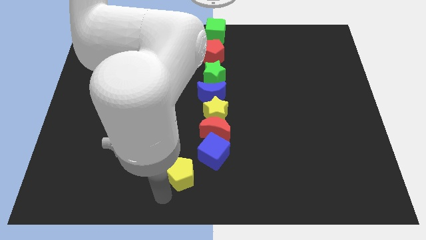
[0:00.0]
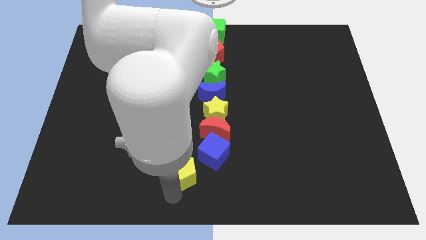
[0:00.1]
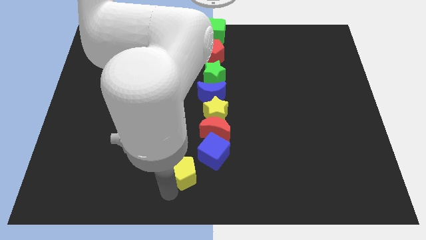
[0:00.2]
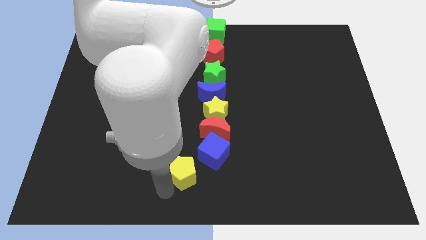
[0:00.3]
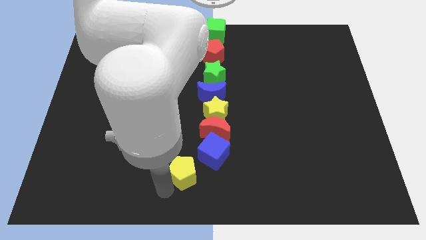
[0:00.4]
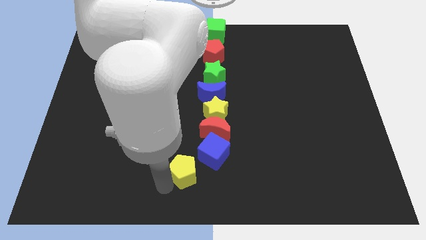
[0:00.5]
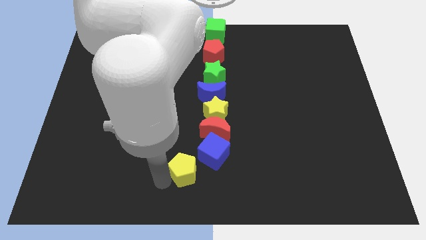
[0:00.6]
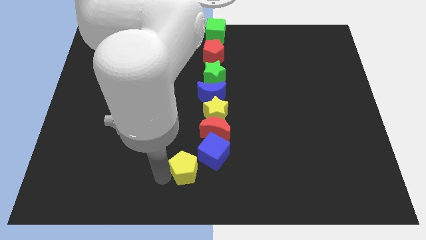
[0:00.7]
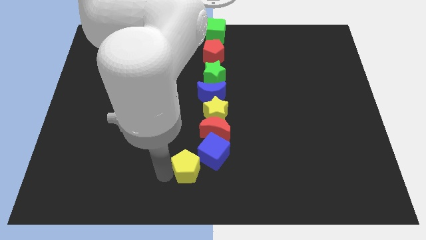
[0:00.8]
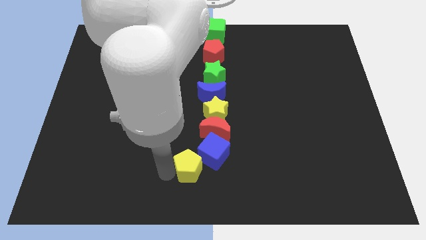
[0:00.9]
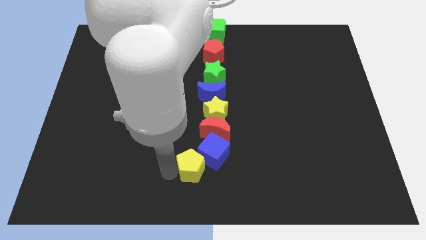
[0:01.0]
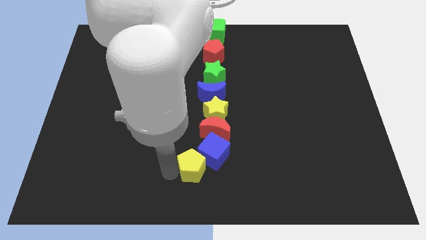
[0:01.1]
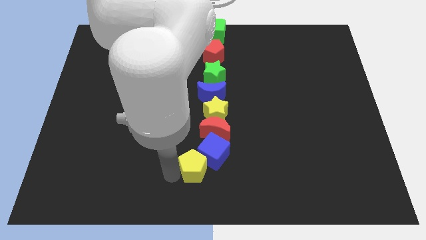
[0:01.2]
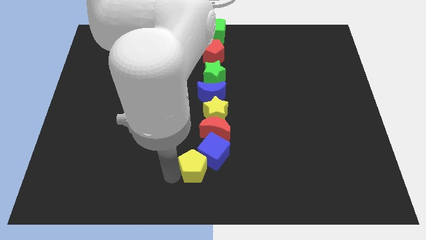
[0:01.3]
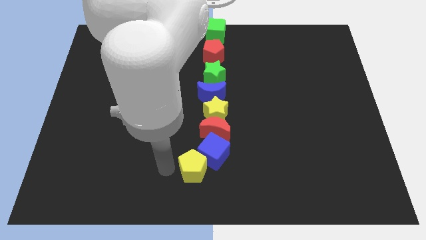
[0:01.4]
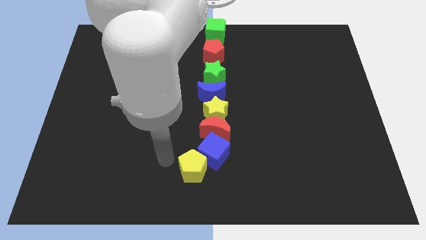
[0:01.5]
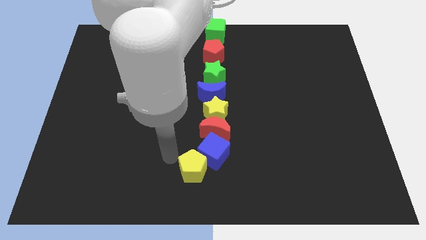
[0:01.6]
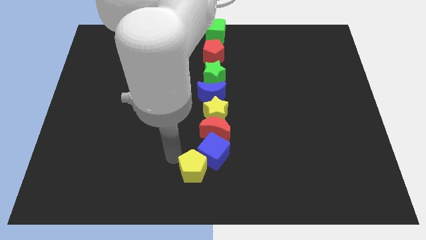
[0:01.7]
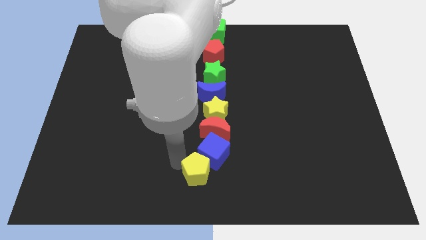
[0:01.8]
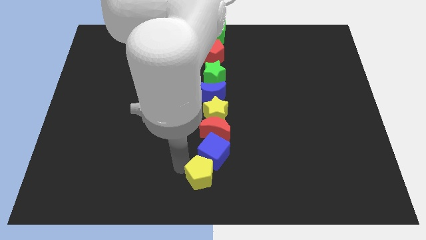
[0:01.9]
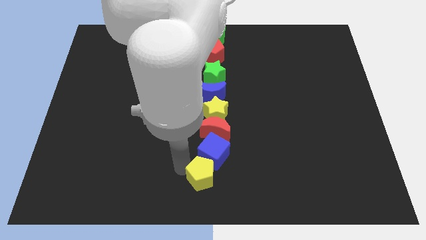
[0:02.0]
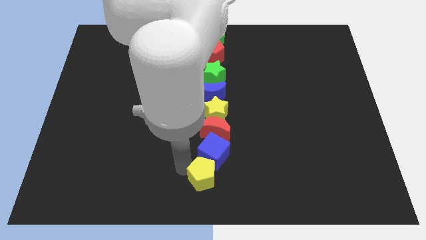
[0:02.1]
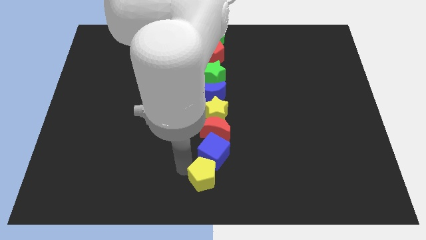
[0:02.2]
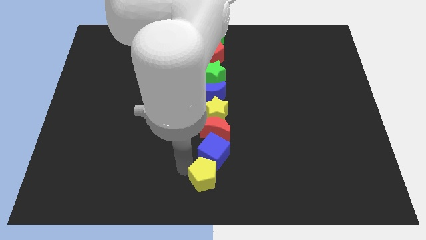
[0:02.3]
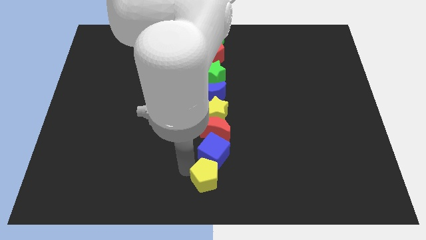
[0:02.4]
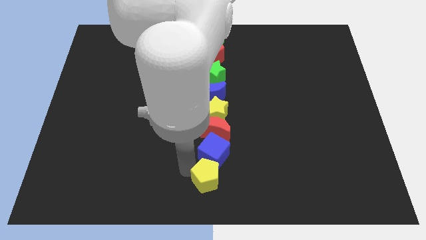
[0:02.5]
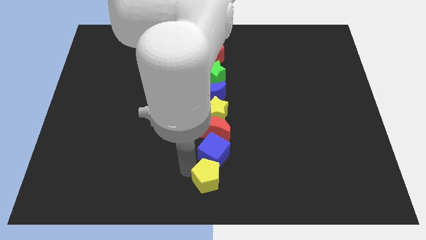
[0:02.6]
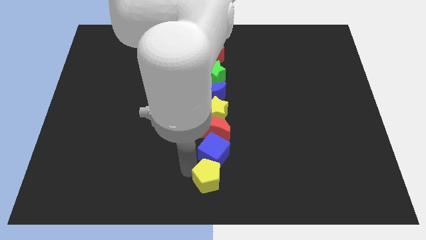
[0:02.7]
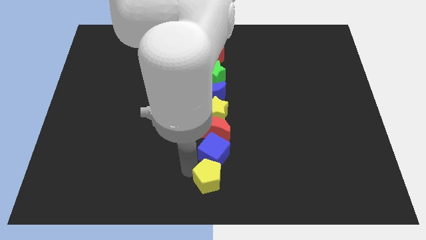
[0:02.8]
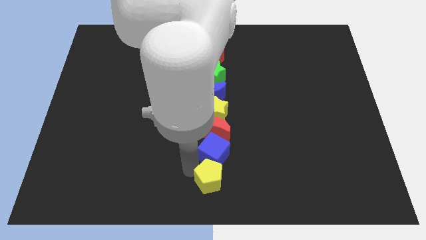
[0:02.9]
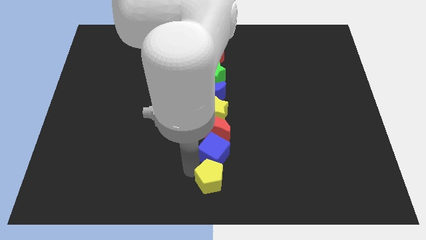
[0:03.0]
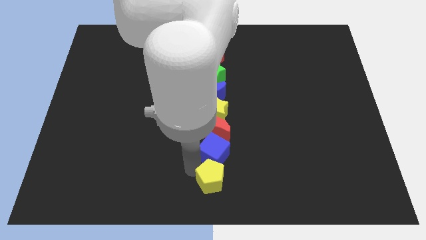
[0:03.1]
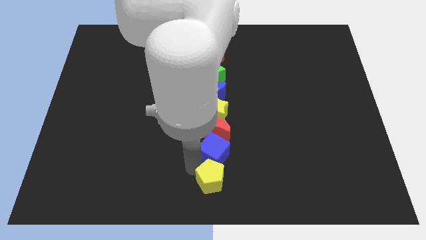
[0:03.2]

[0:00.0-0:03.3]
place the yellow pentagon below the blue cube in a vertical line of blocks

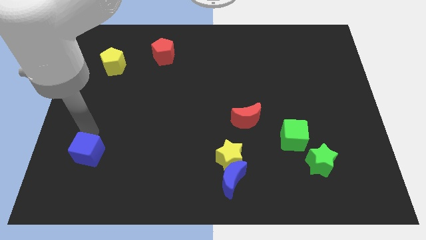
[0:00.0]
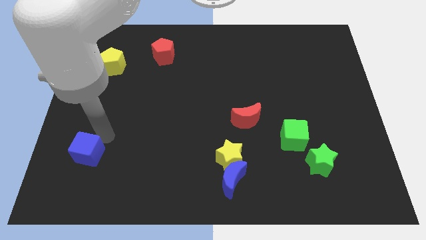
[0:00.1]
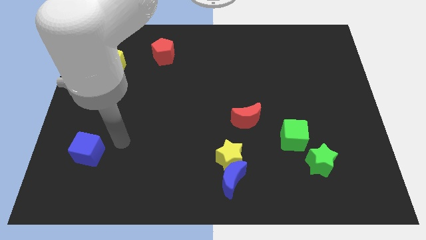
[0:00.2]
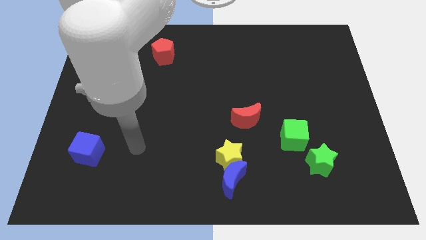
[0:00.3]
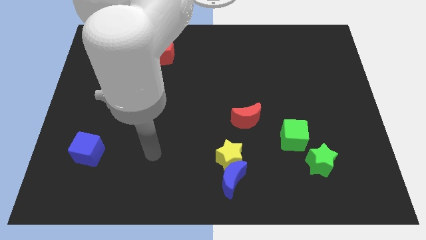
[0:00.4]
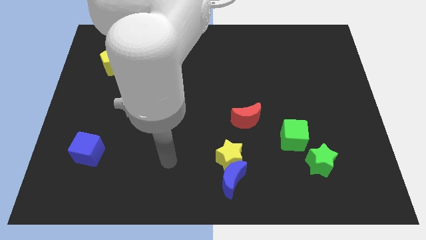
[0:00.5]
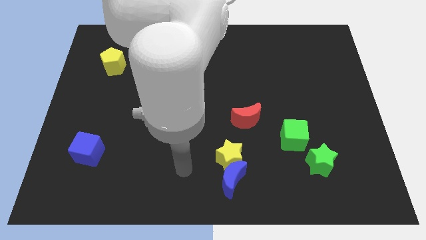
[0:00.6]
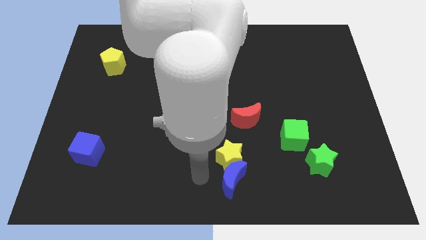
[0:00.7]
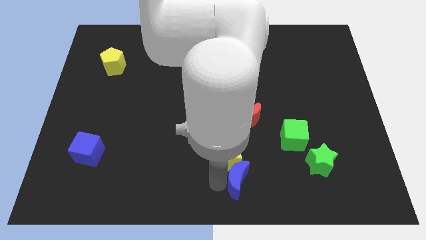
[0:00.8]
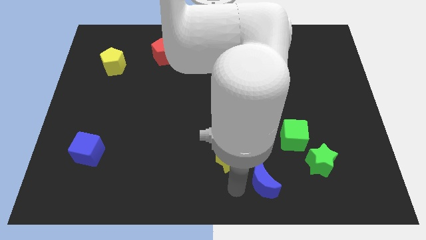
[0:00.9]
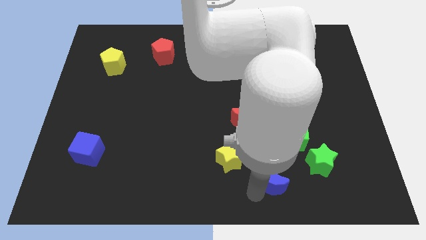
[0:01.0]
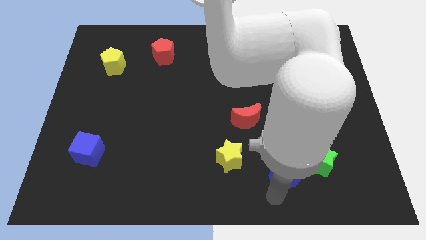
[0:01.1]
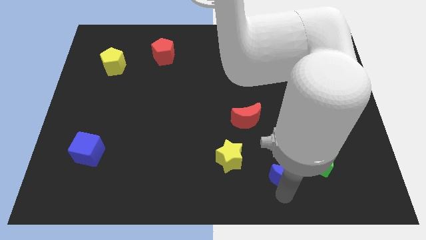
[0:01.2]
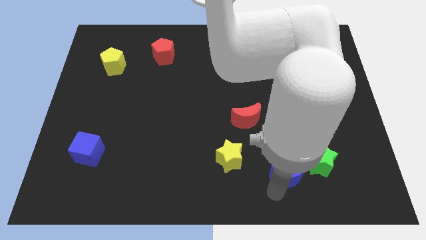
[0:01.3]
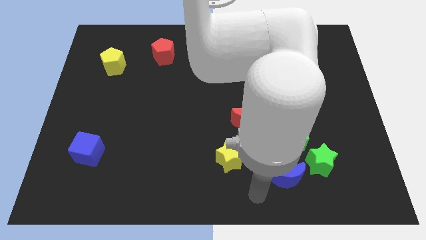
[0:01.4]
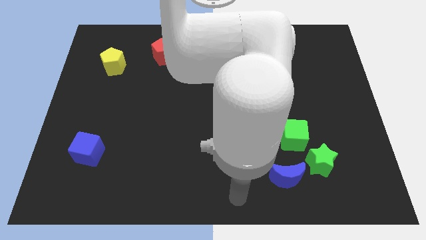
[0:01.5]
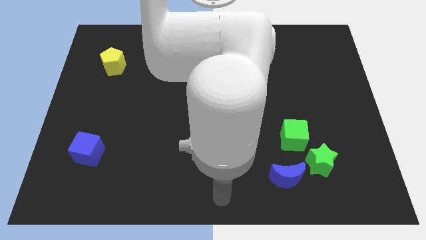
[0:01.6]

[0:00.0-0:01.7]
move the blue crescent to the bottom of the green cube

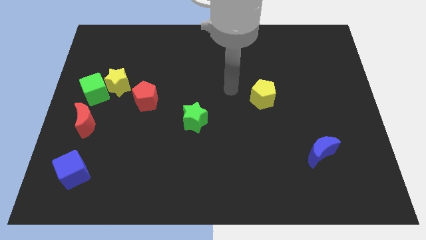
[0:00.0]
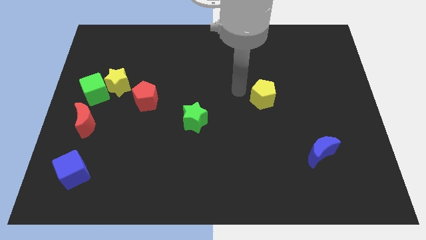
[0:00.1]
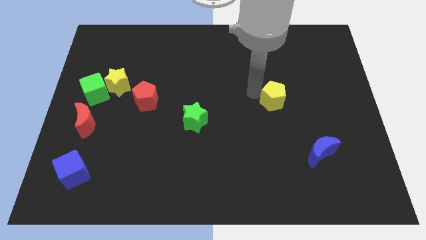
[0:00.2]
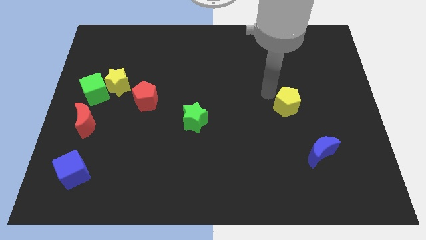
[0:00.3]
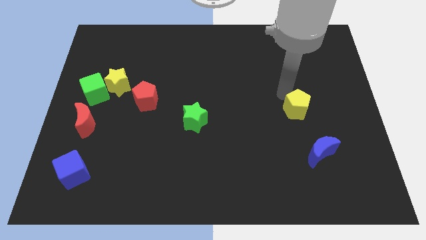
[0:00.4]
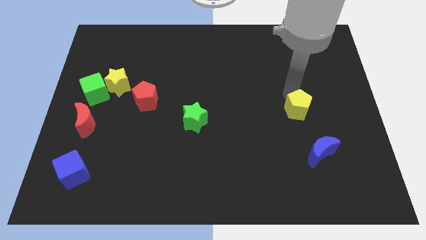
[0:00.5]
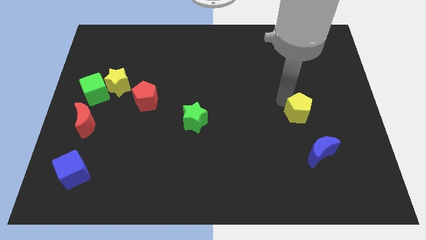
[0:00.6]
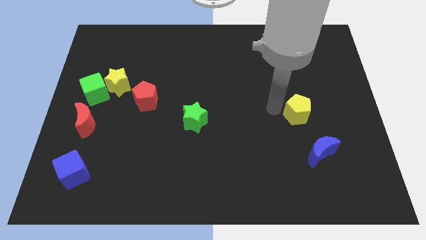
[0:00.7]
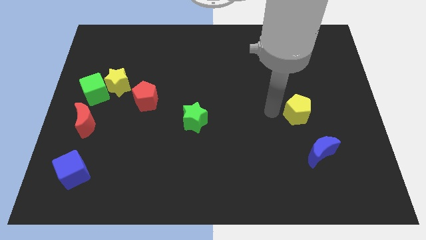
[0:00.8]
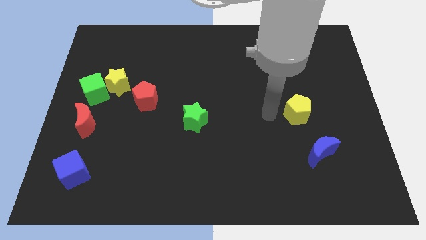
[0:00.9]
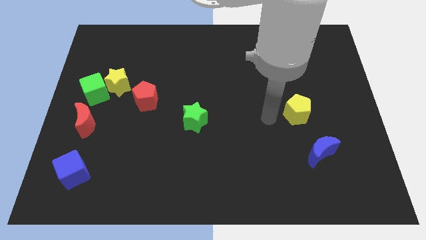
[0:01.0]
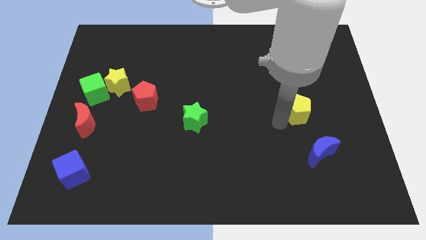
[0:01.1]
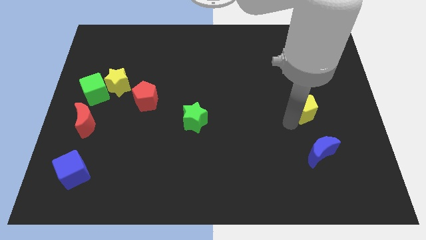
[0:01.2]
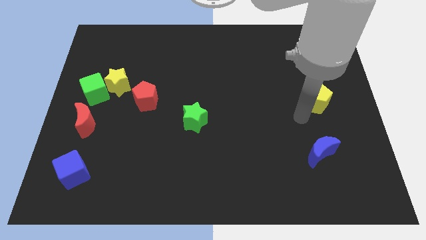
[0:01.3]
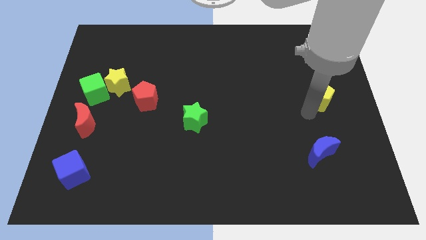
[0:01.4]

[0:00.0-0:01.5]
drag the yellow pentagon towards the center right

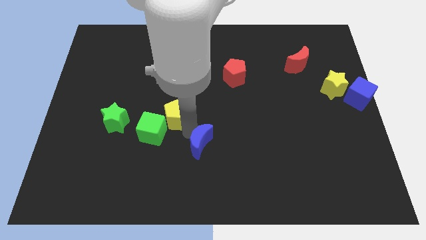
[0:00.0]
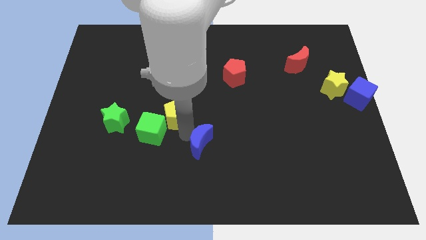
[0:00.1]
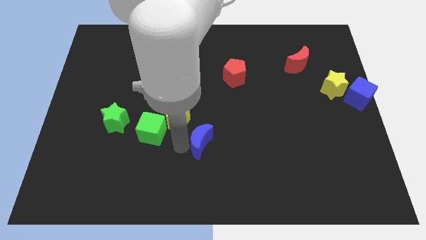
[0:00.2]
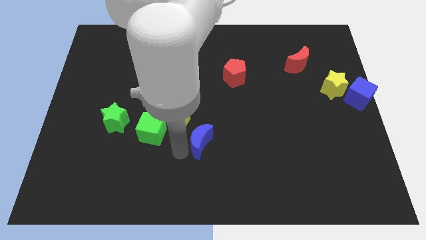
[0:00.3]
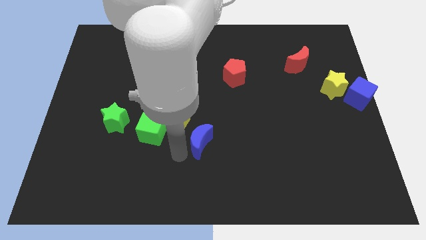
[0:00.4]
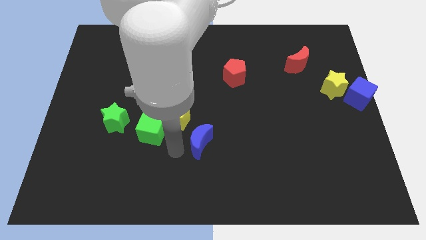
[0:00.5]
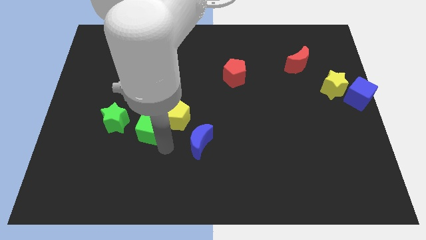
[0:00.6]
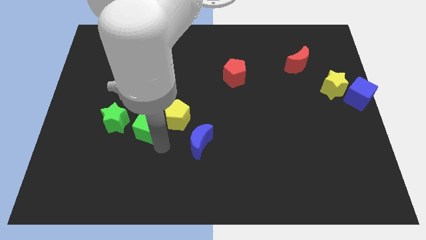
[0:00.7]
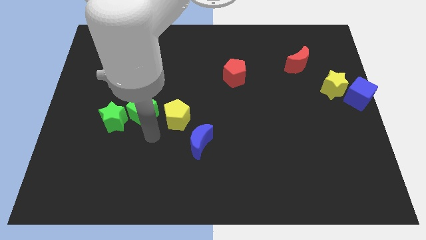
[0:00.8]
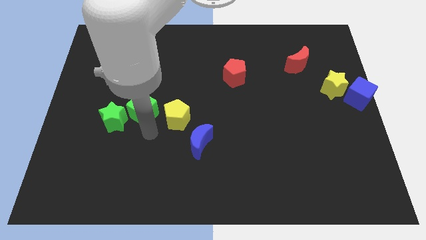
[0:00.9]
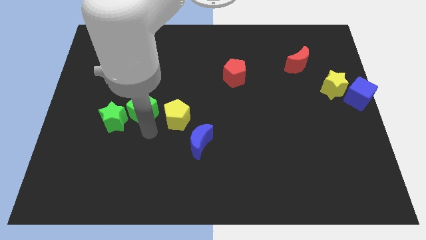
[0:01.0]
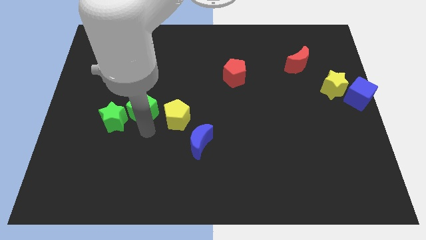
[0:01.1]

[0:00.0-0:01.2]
move green cube into the green star

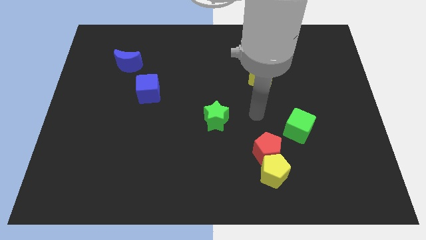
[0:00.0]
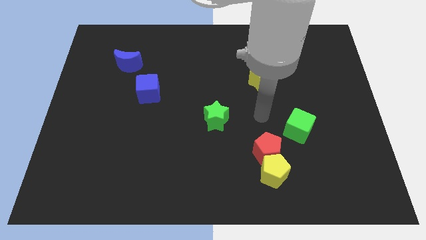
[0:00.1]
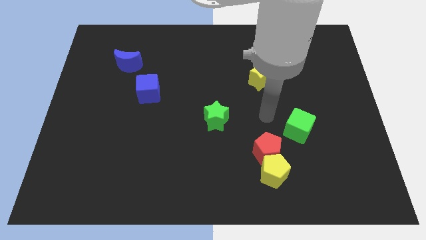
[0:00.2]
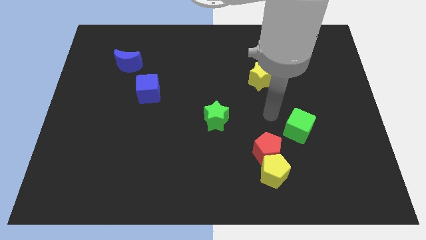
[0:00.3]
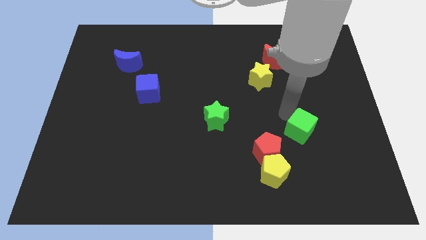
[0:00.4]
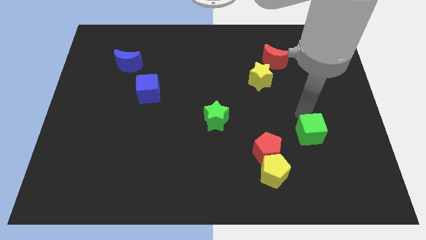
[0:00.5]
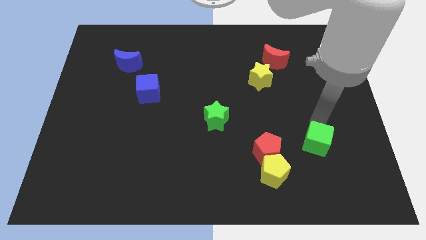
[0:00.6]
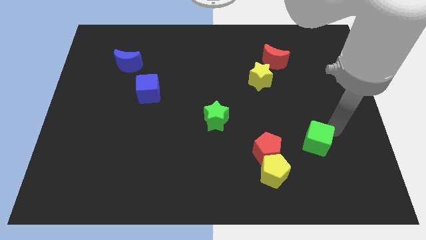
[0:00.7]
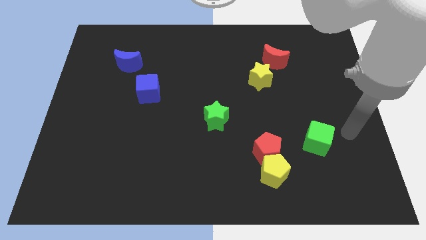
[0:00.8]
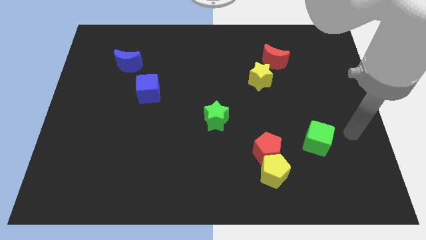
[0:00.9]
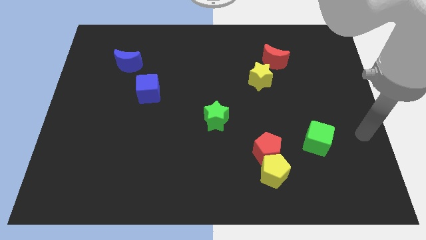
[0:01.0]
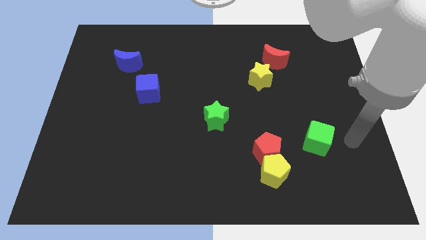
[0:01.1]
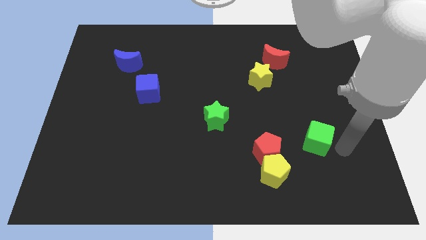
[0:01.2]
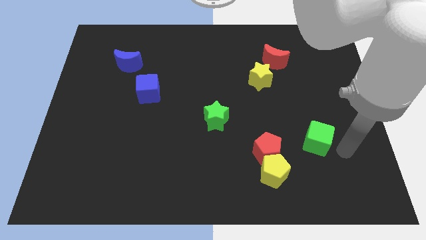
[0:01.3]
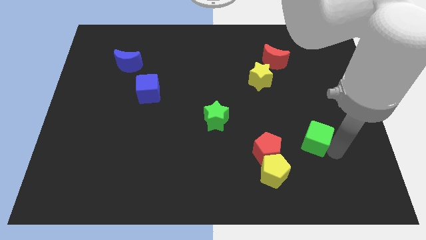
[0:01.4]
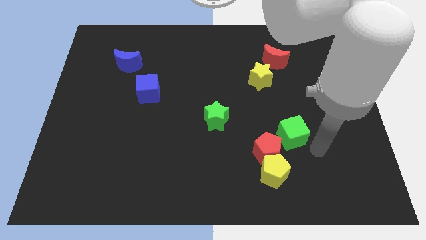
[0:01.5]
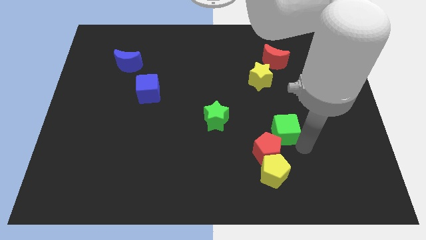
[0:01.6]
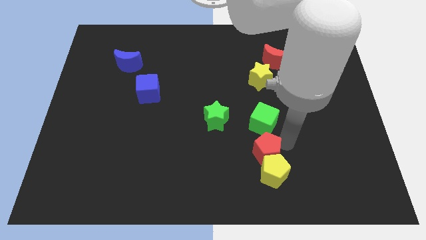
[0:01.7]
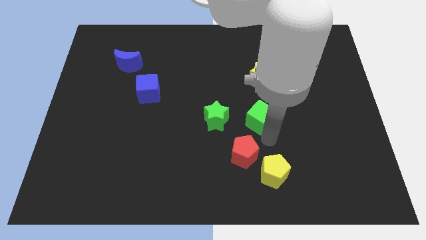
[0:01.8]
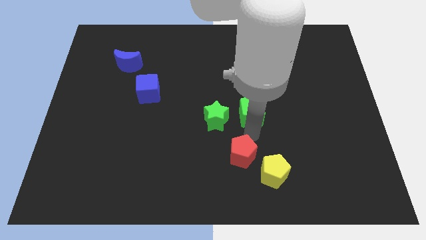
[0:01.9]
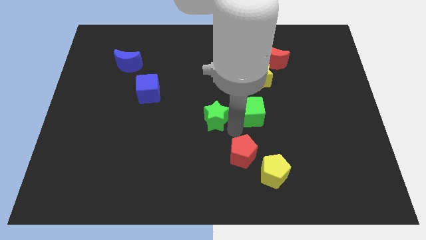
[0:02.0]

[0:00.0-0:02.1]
move the green cube to the right side of the green star
